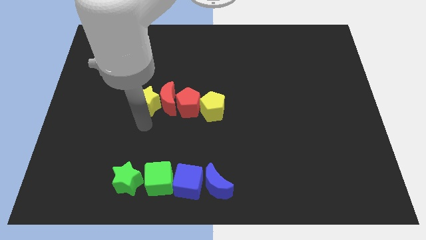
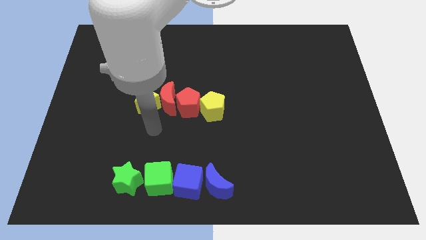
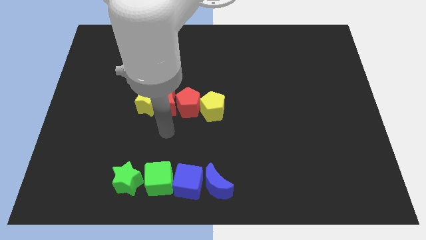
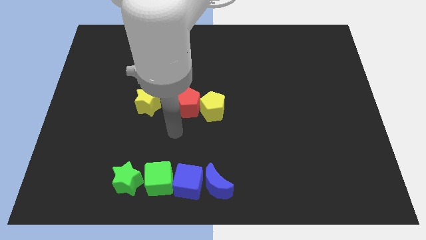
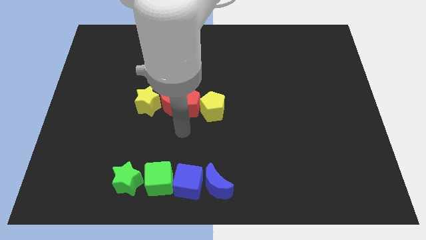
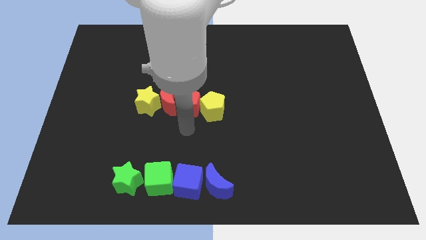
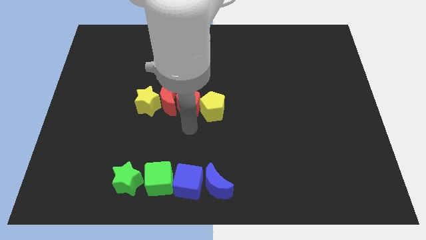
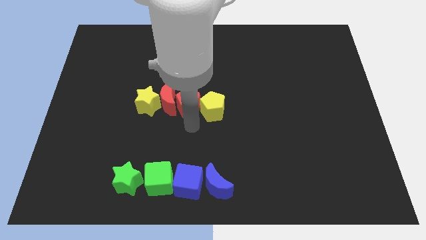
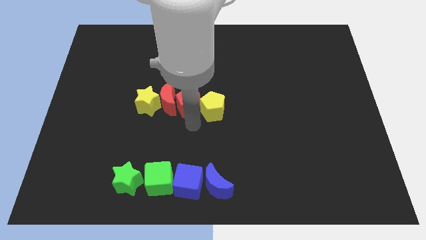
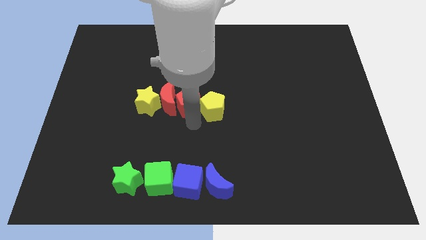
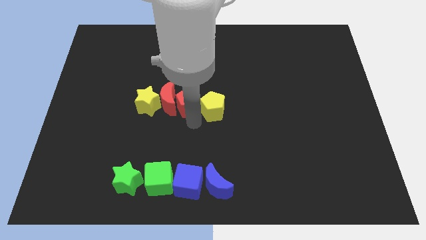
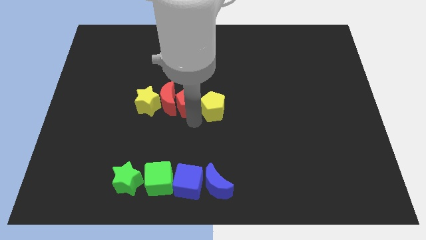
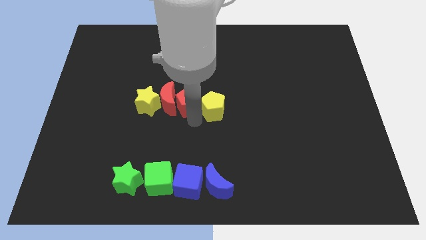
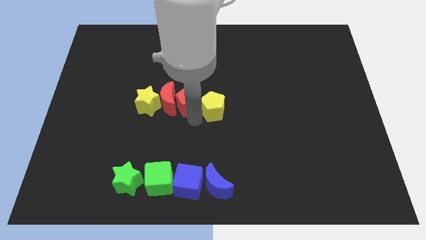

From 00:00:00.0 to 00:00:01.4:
place the hand below the red pentagon

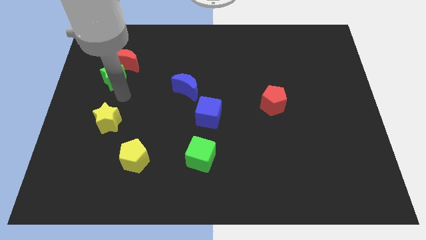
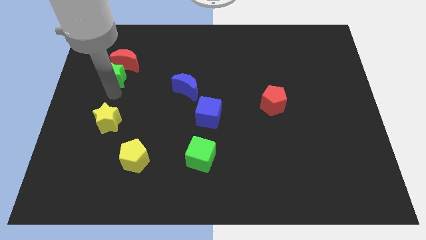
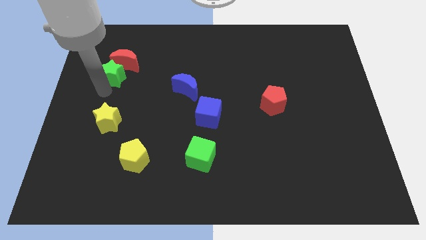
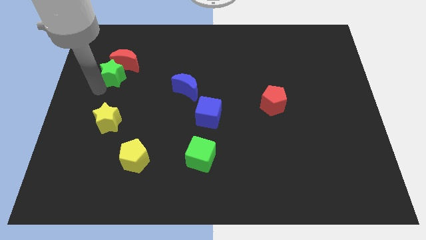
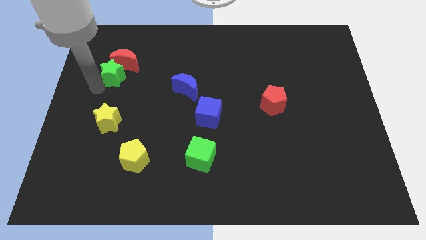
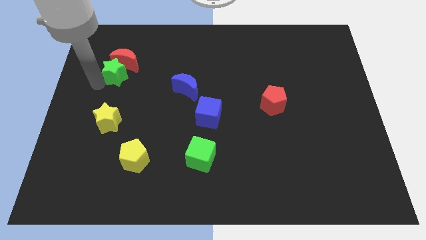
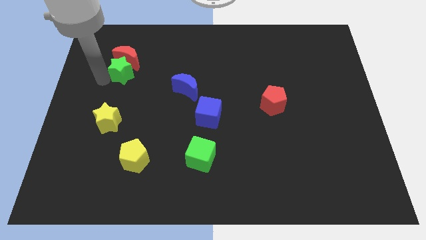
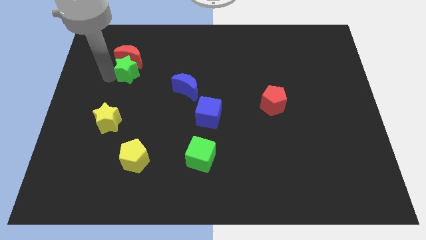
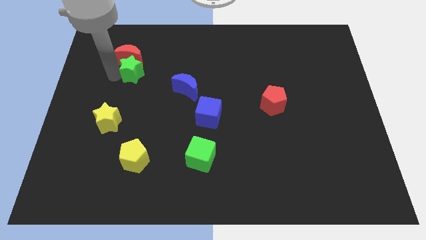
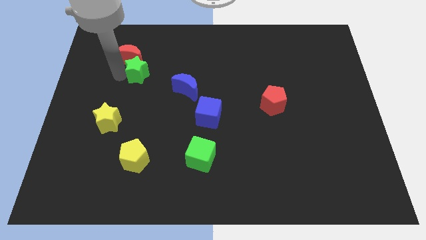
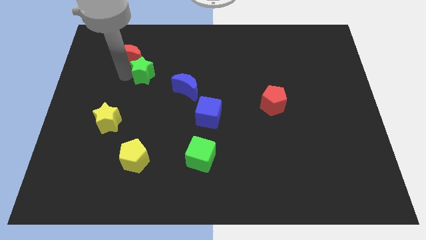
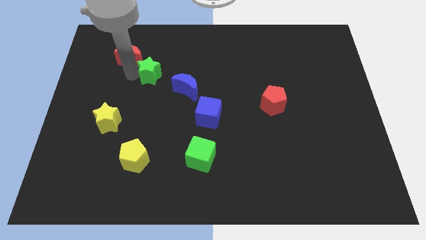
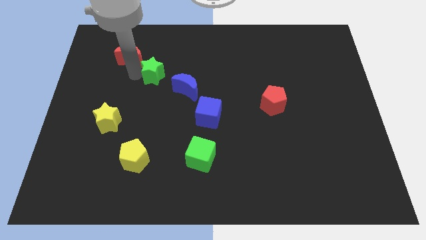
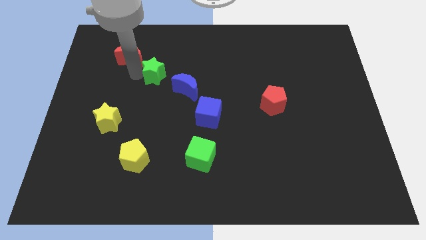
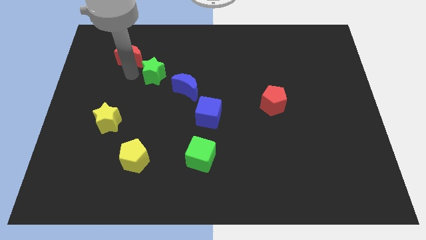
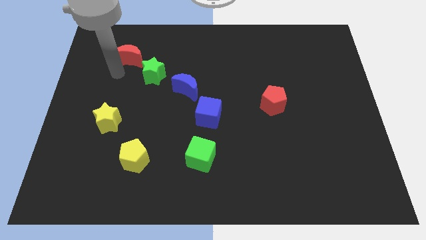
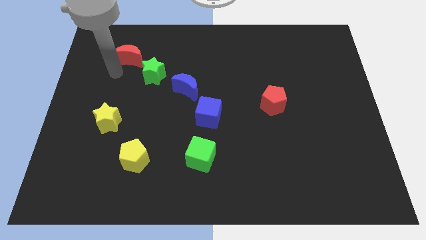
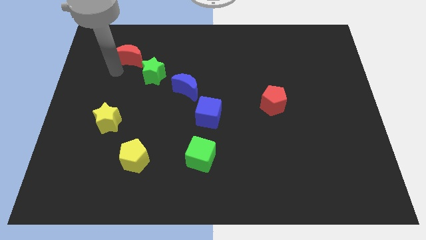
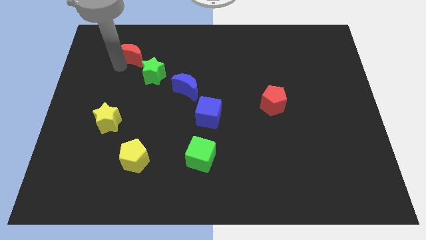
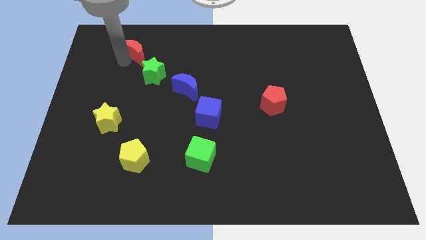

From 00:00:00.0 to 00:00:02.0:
move the green star towards the blue moon

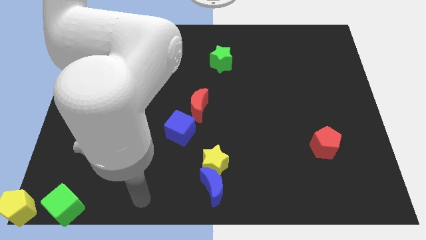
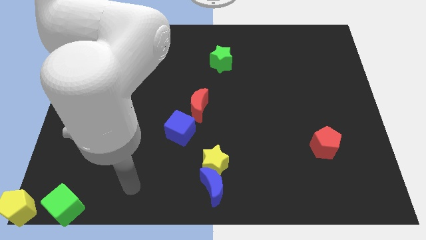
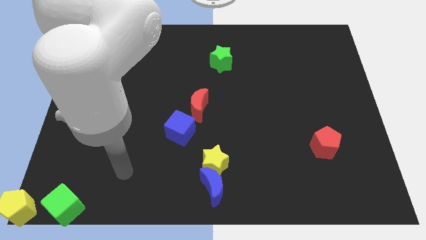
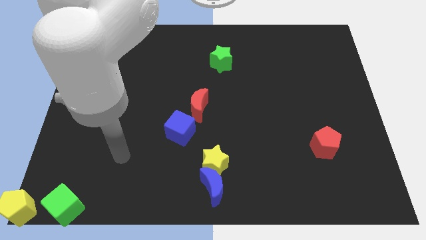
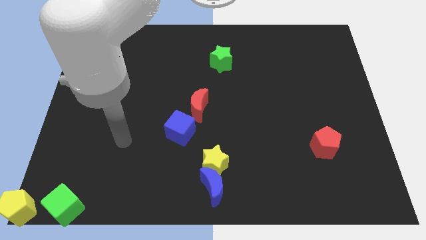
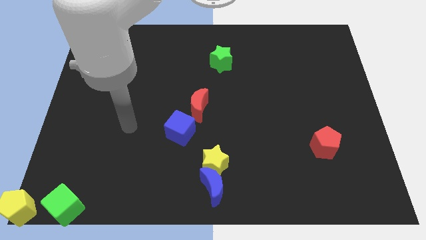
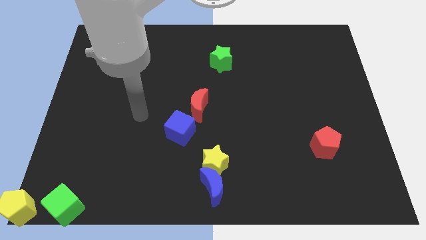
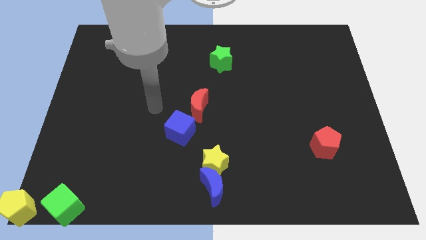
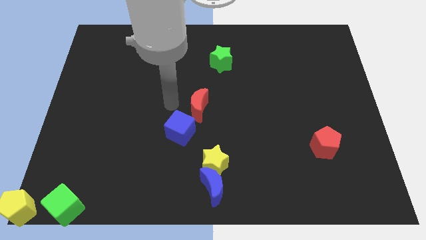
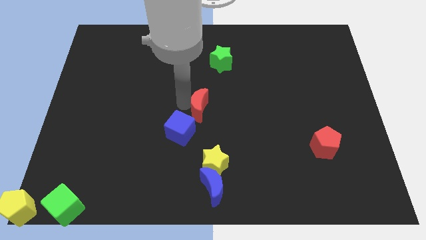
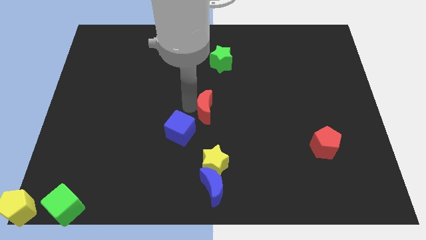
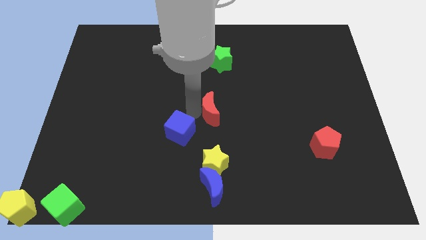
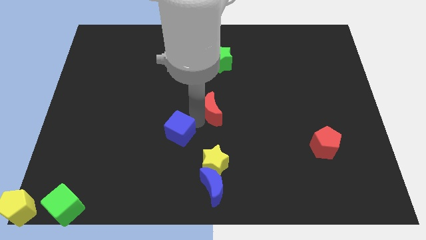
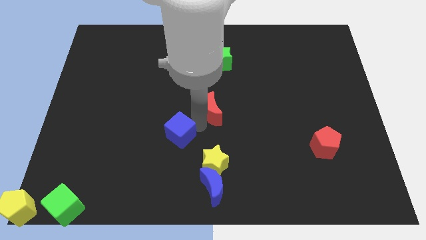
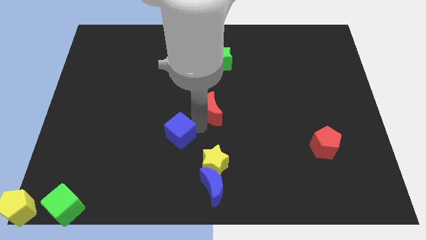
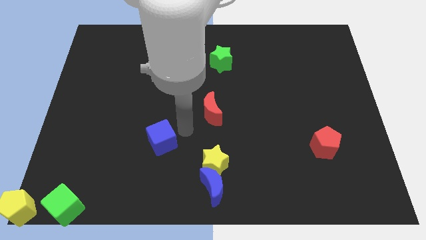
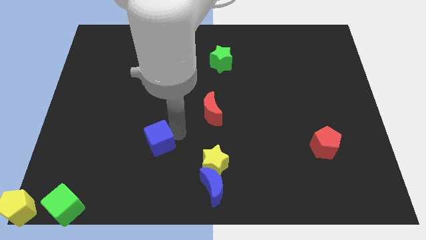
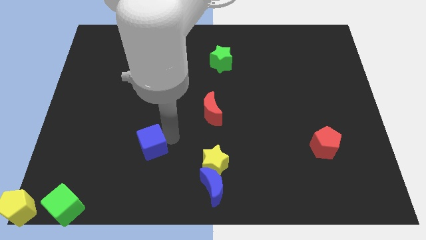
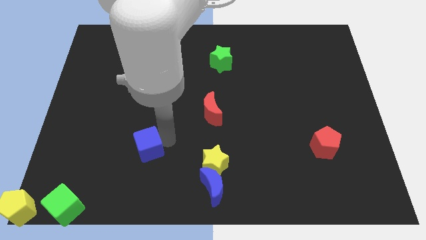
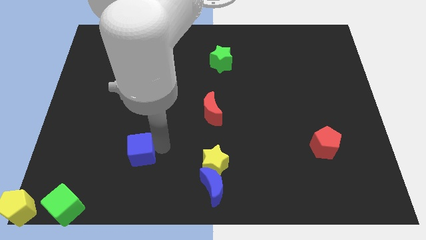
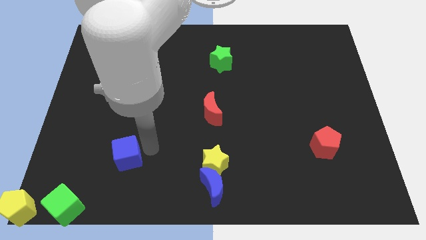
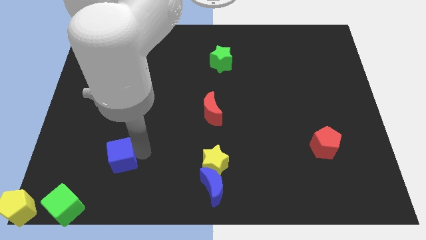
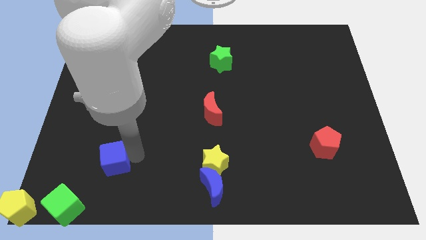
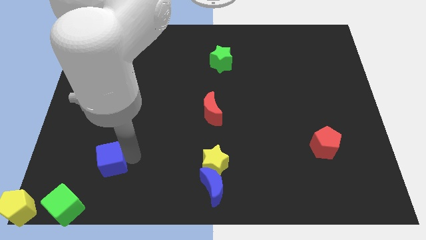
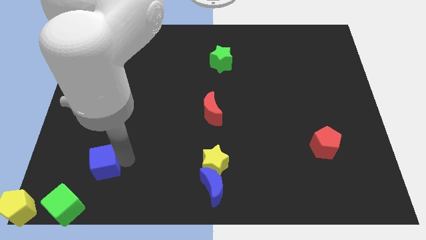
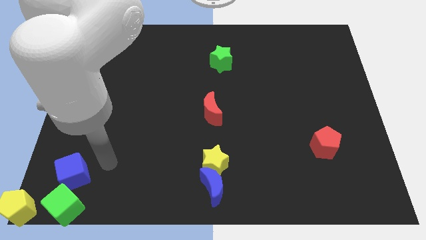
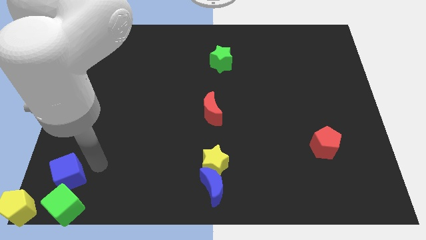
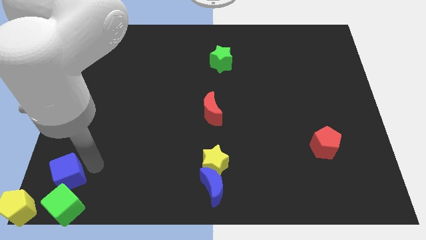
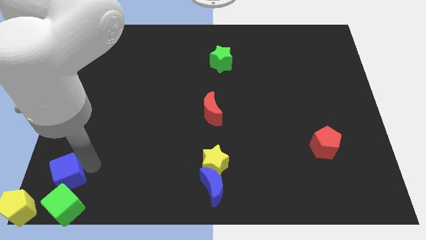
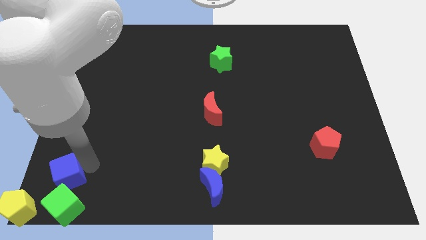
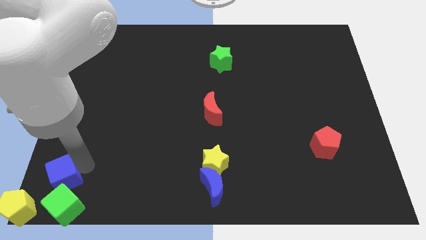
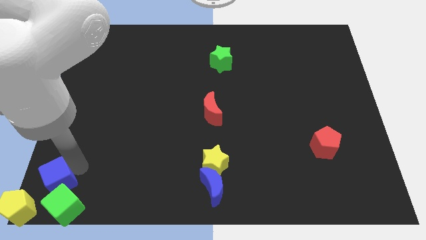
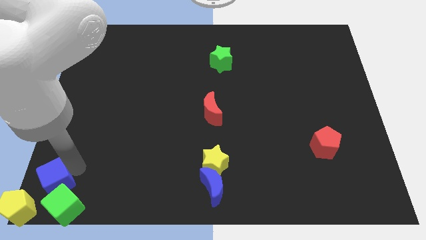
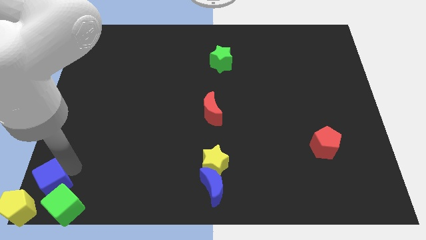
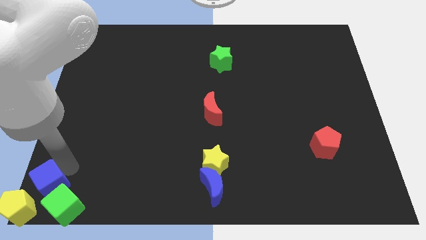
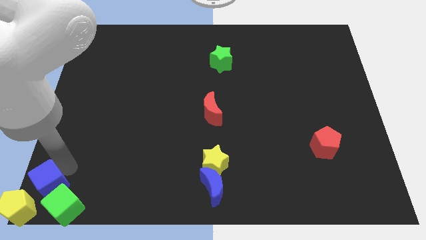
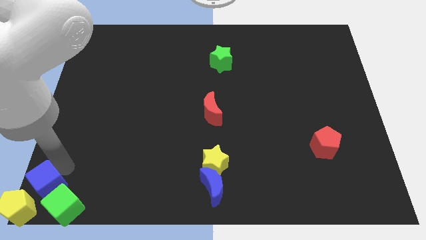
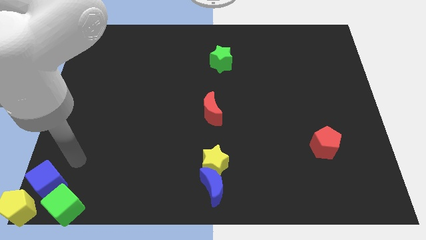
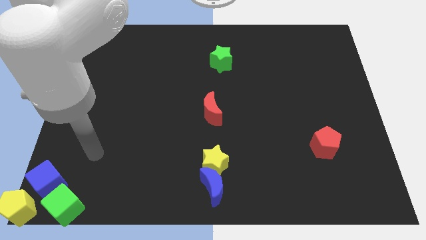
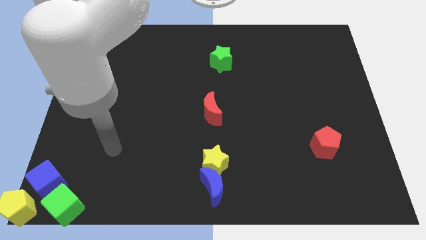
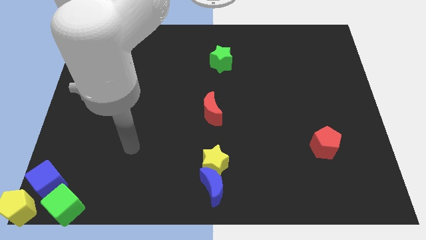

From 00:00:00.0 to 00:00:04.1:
place the blue cube close to the green cube and yellow pentagon

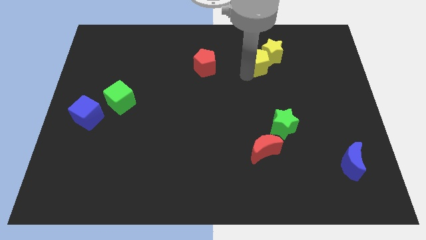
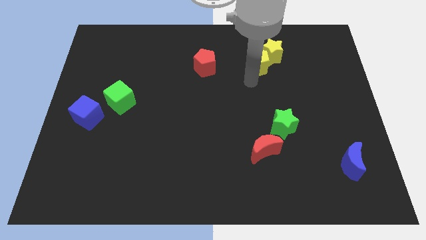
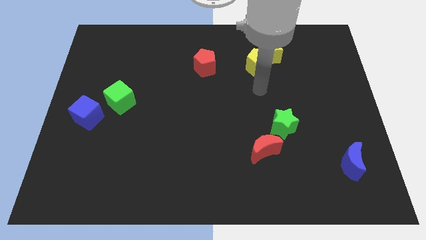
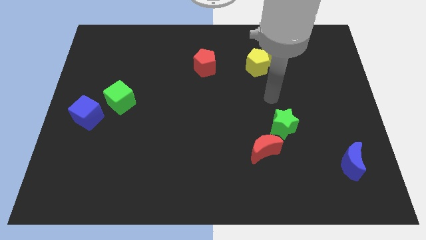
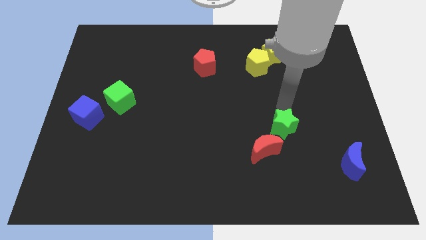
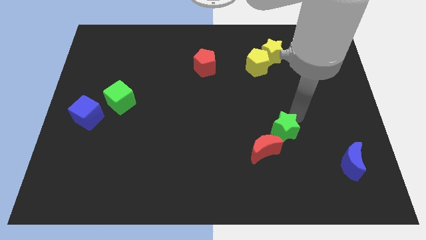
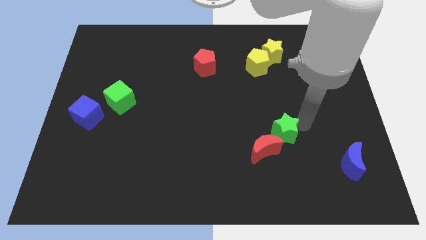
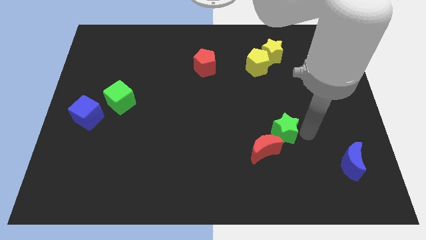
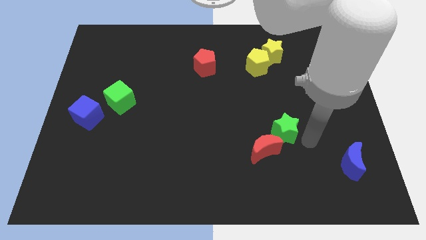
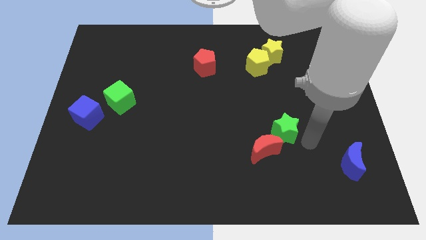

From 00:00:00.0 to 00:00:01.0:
move green star into the red moon

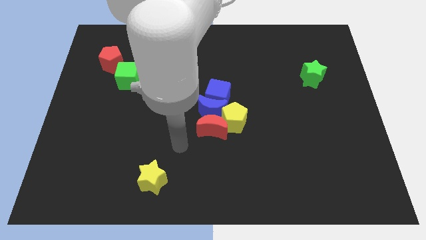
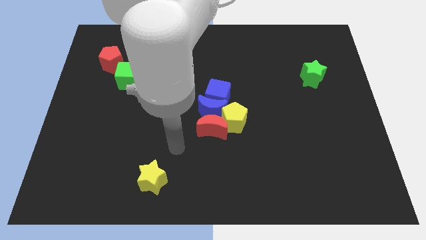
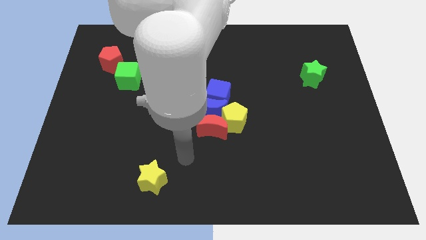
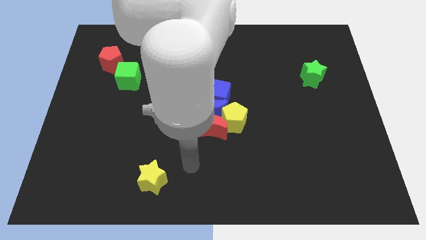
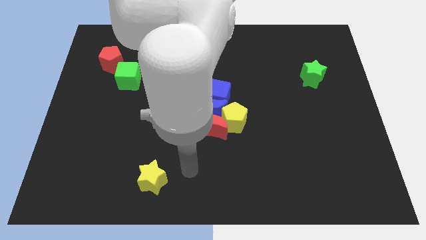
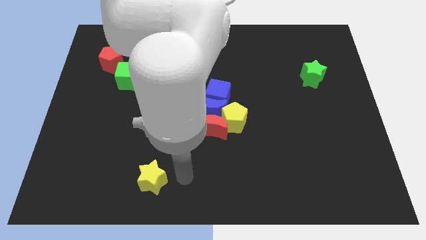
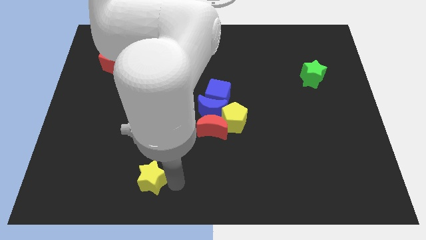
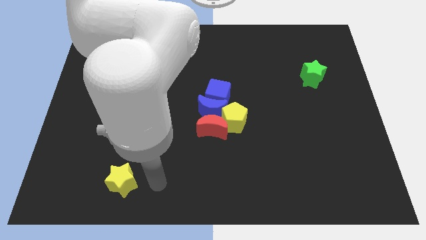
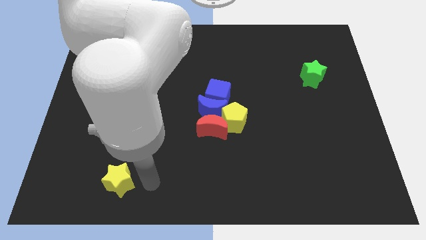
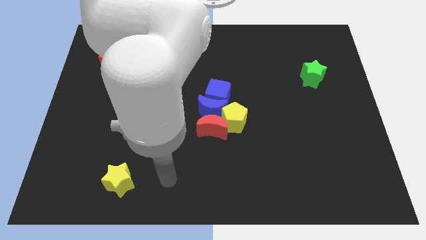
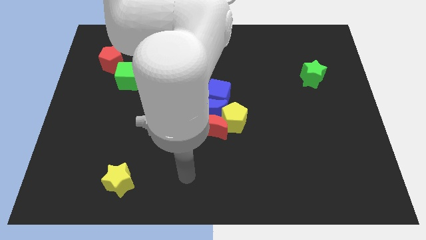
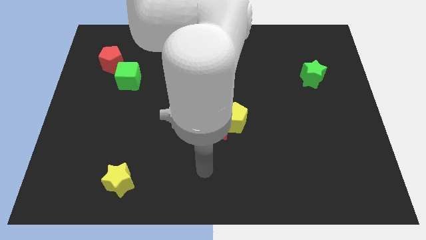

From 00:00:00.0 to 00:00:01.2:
slightly push the yellow star to the bottom left of the board
